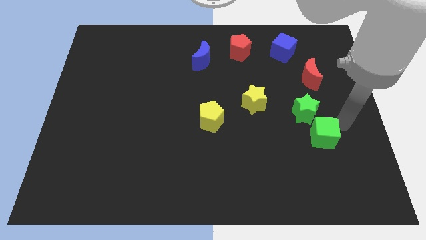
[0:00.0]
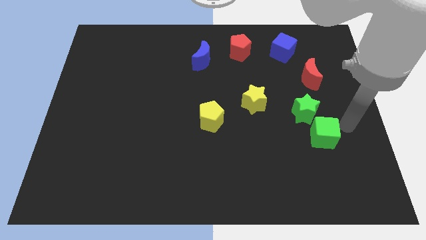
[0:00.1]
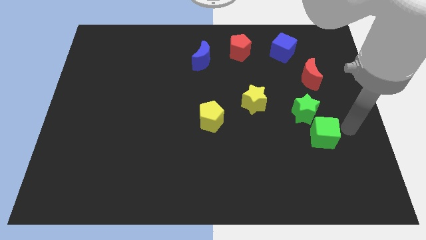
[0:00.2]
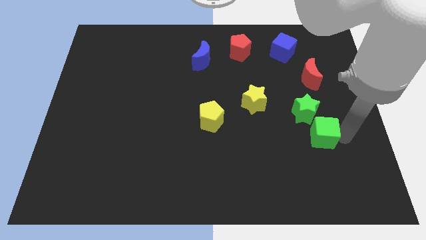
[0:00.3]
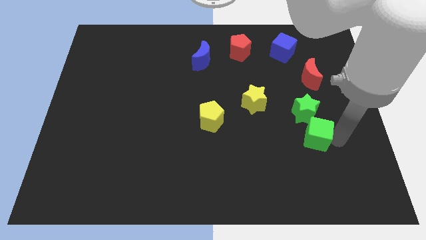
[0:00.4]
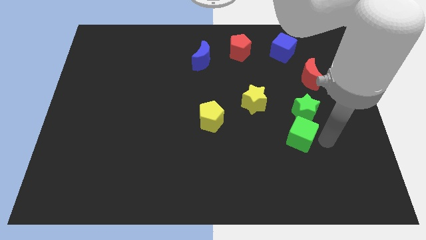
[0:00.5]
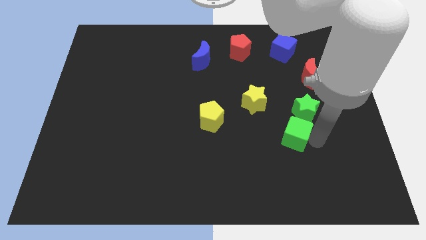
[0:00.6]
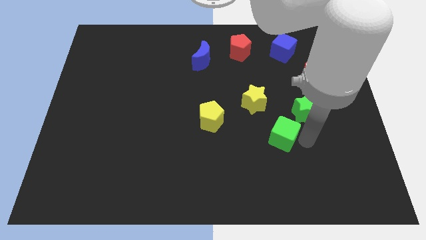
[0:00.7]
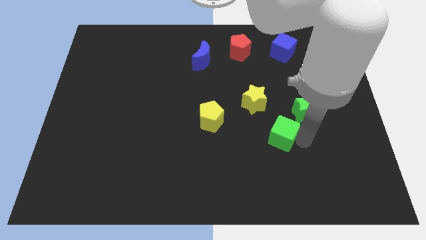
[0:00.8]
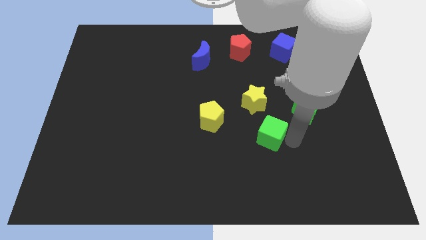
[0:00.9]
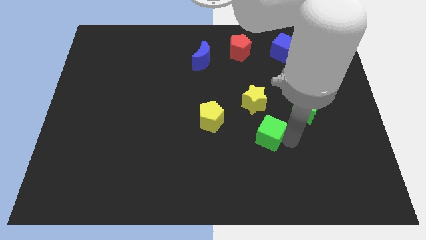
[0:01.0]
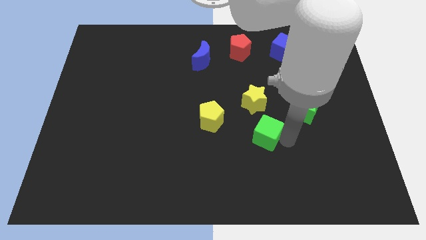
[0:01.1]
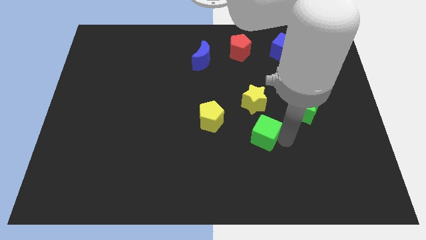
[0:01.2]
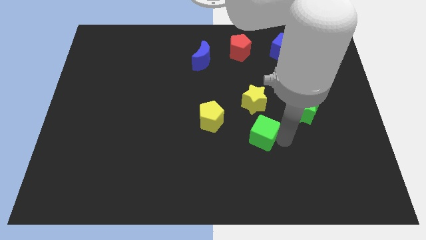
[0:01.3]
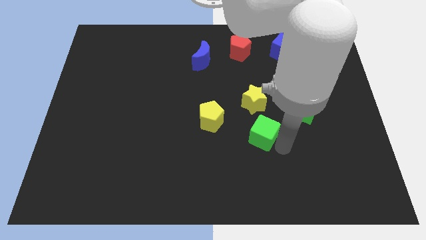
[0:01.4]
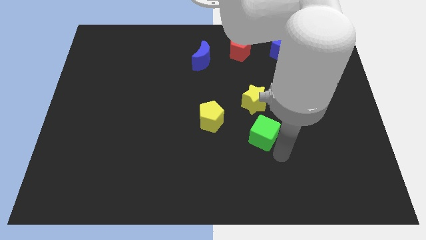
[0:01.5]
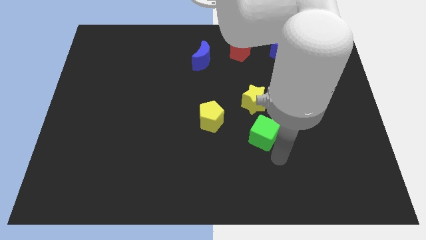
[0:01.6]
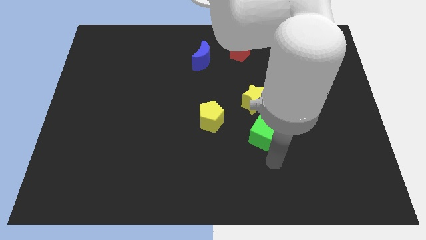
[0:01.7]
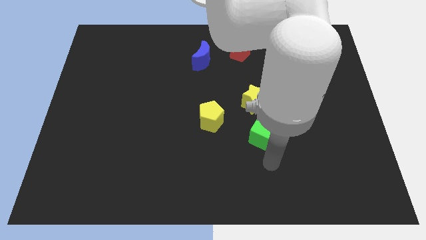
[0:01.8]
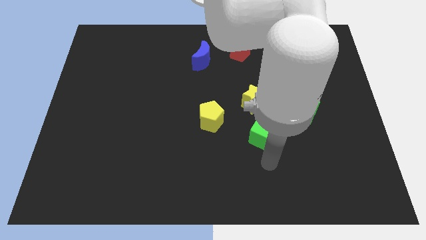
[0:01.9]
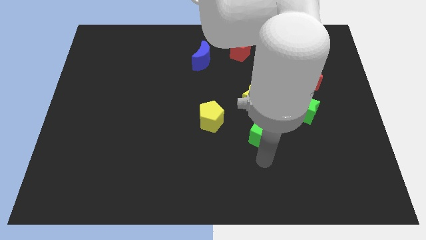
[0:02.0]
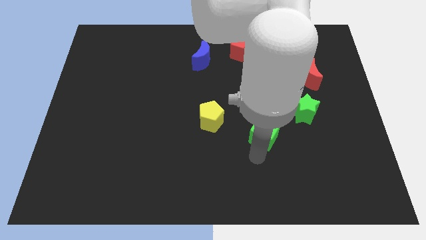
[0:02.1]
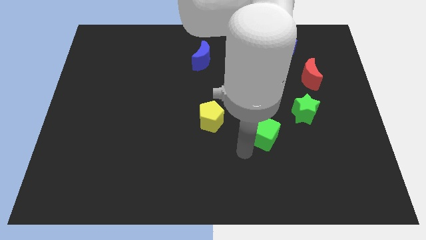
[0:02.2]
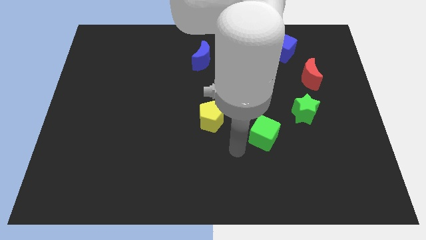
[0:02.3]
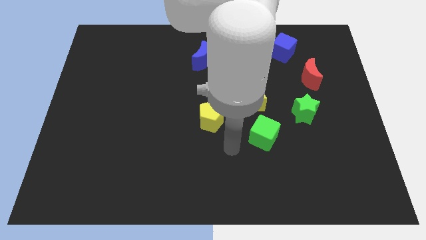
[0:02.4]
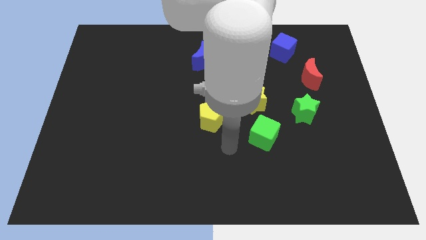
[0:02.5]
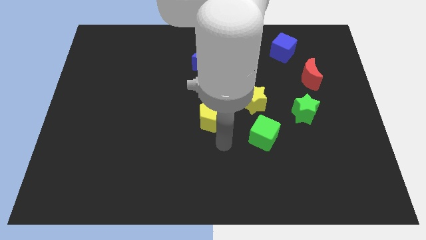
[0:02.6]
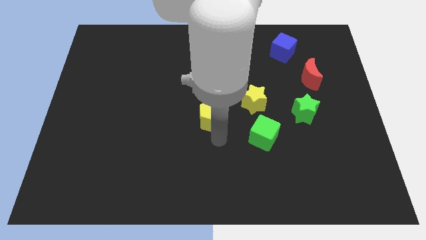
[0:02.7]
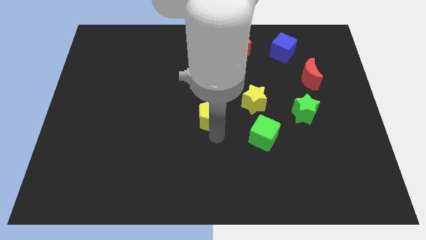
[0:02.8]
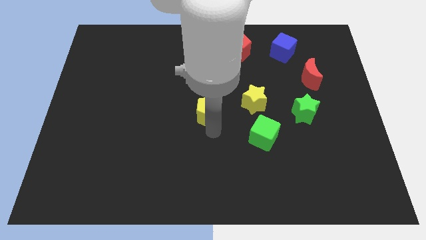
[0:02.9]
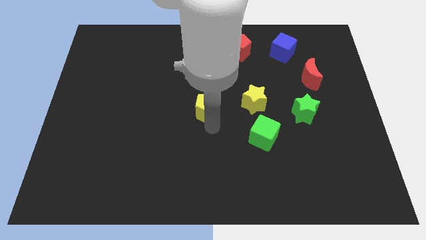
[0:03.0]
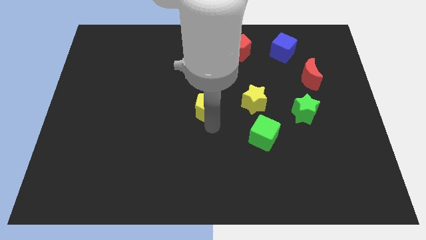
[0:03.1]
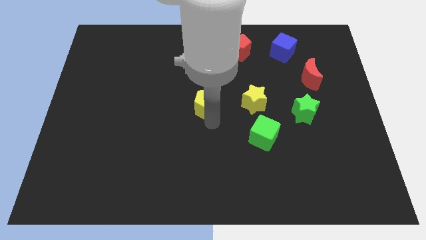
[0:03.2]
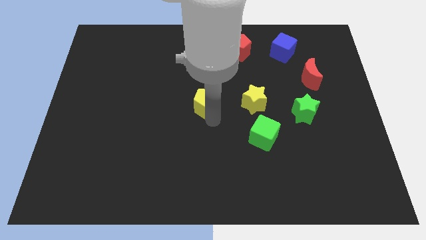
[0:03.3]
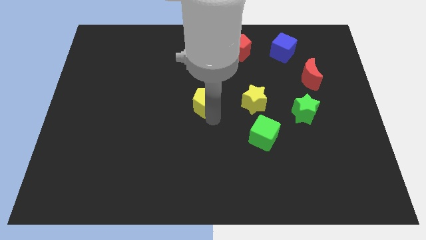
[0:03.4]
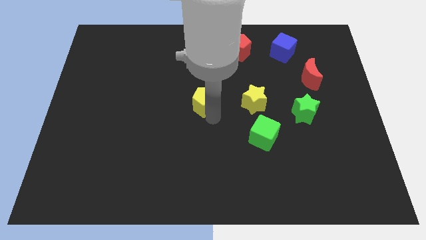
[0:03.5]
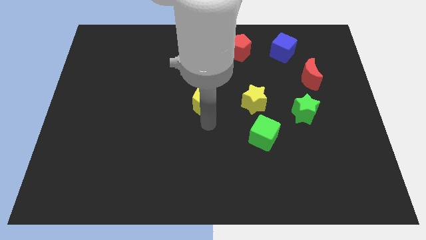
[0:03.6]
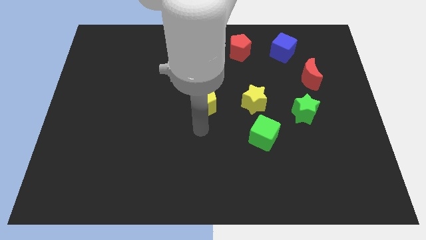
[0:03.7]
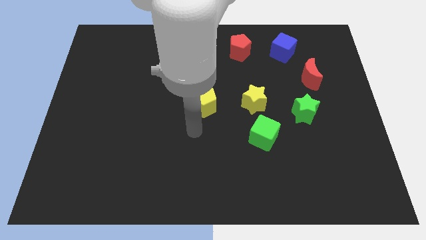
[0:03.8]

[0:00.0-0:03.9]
move green cube below yellow star

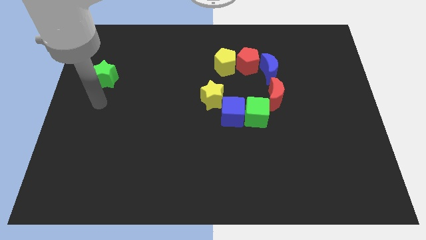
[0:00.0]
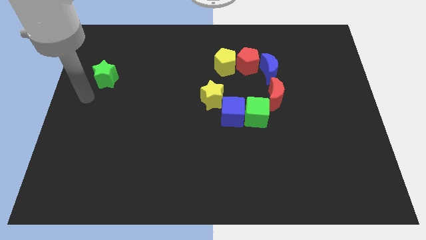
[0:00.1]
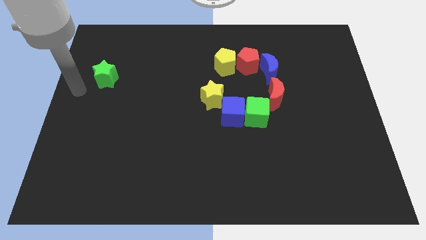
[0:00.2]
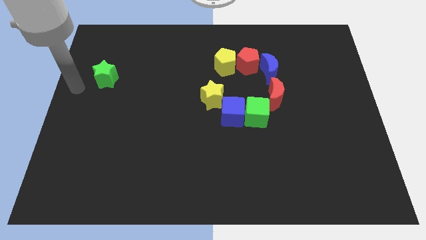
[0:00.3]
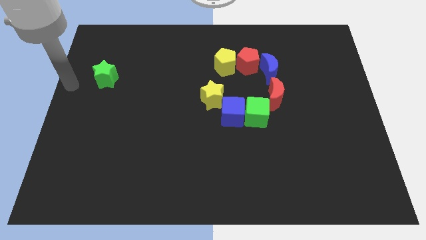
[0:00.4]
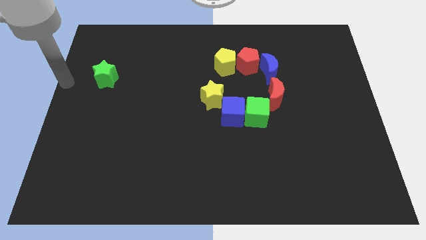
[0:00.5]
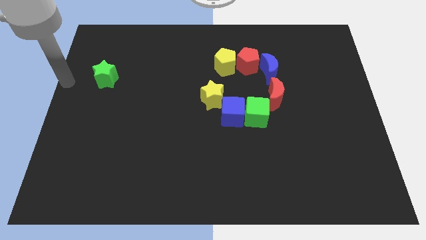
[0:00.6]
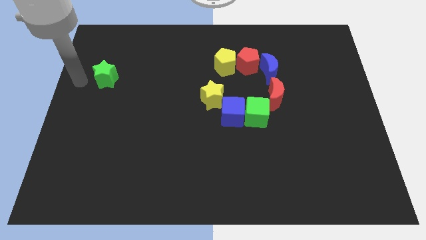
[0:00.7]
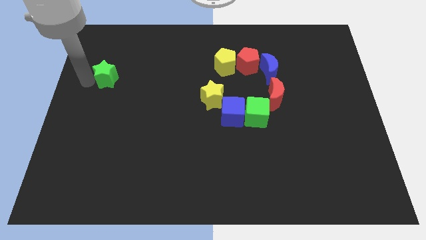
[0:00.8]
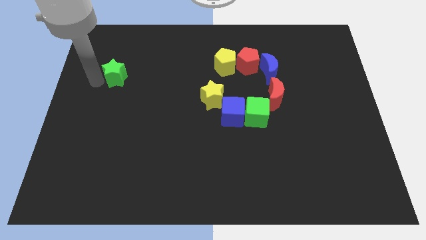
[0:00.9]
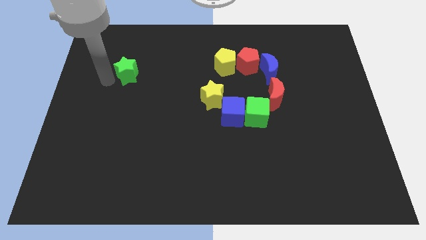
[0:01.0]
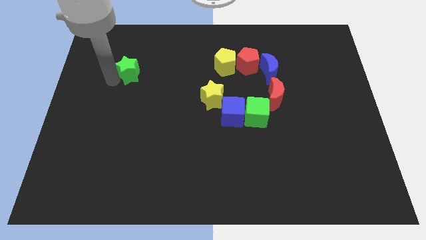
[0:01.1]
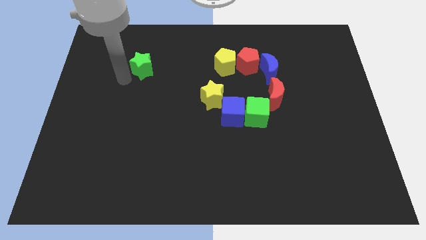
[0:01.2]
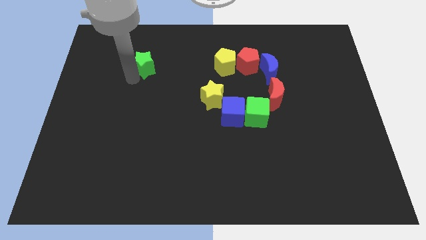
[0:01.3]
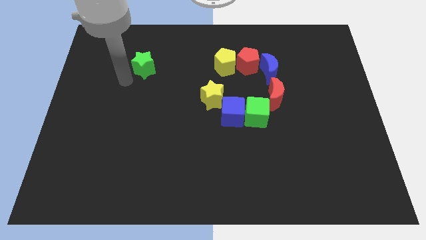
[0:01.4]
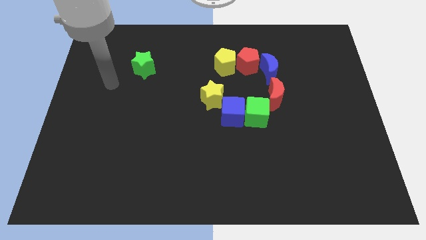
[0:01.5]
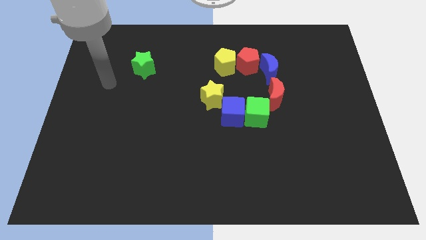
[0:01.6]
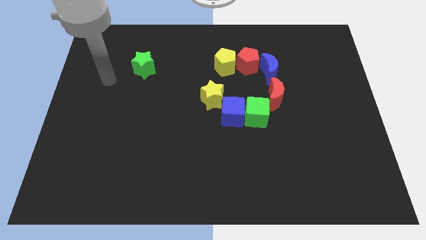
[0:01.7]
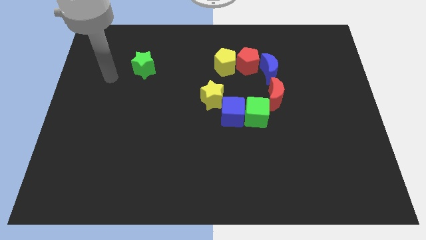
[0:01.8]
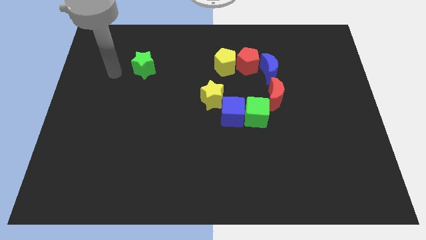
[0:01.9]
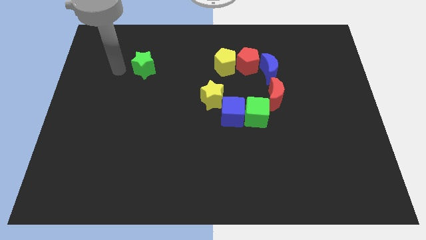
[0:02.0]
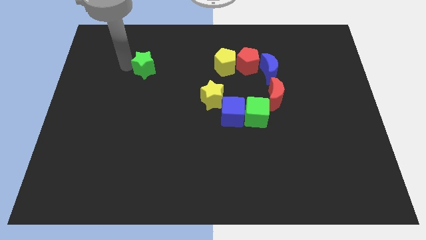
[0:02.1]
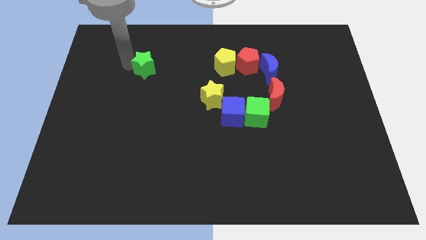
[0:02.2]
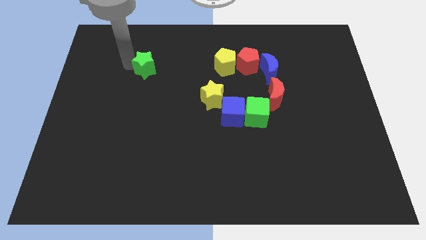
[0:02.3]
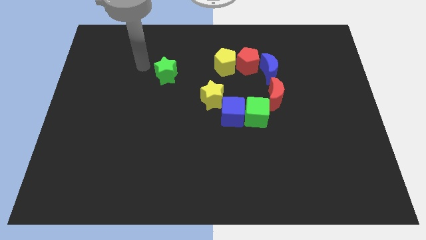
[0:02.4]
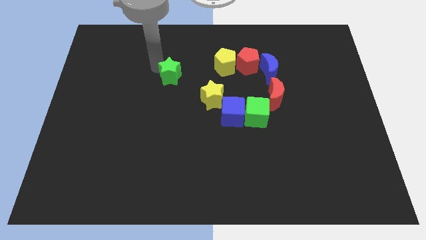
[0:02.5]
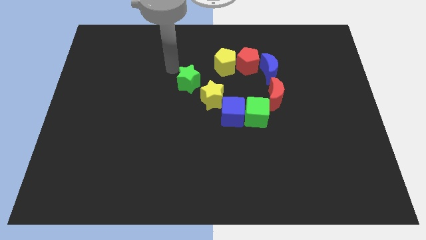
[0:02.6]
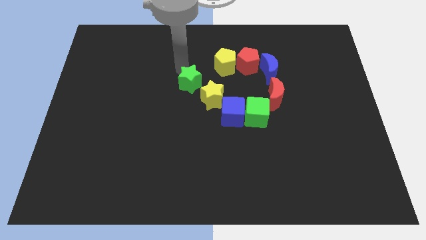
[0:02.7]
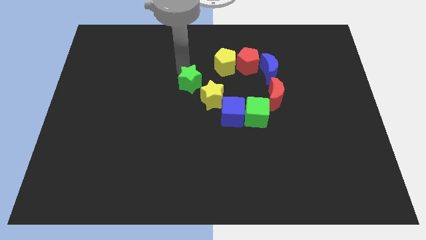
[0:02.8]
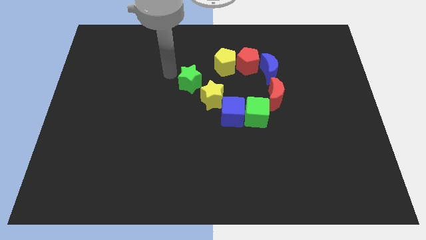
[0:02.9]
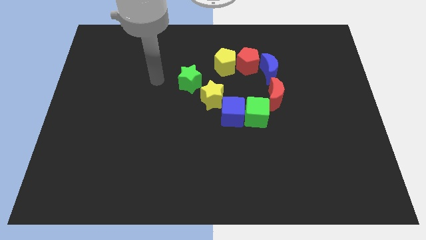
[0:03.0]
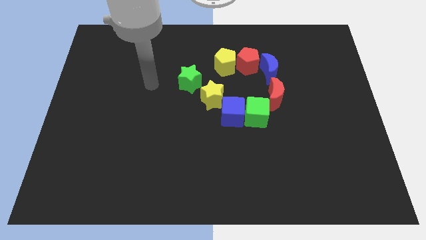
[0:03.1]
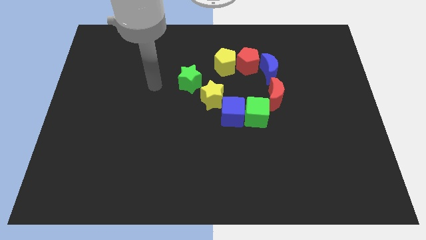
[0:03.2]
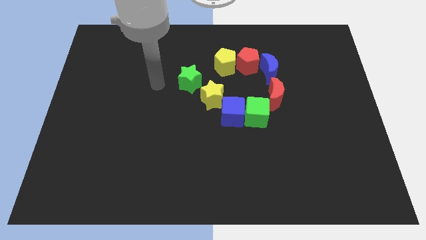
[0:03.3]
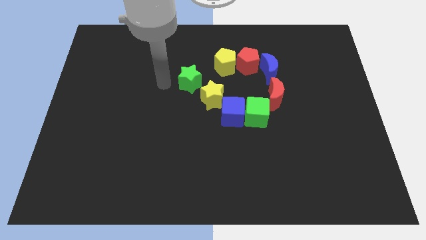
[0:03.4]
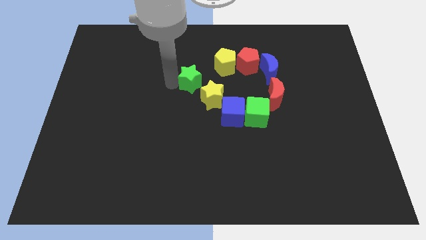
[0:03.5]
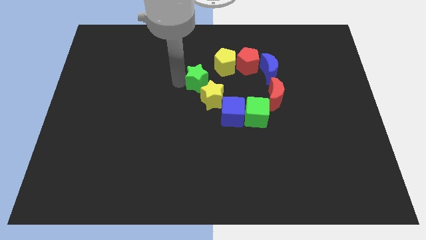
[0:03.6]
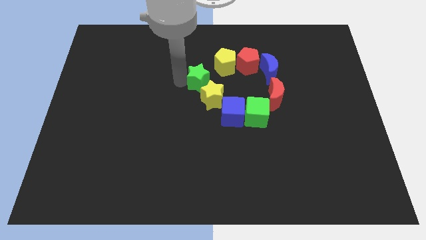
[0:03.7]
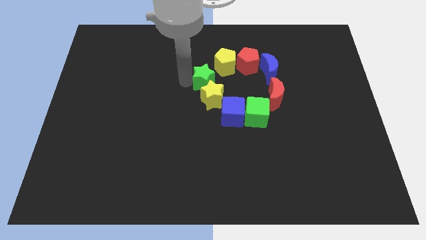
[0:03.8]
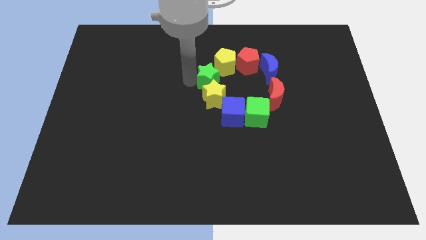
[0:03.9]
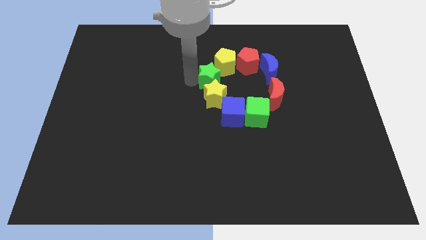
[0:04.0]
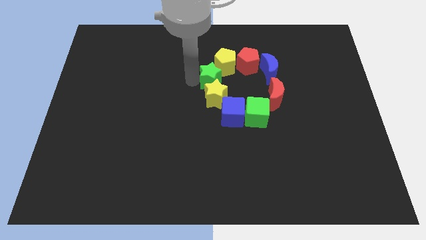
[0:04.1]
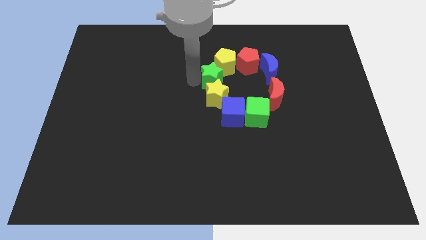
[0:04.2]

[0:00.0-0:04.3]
push the green star into the yellow star

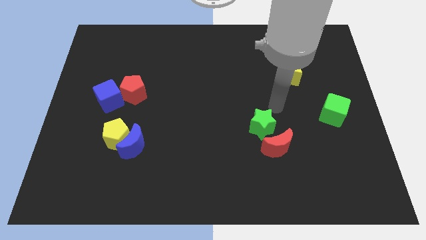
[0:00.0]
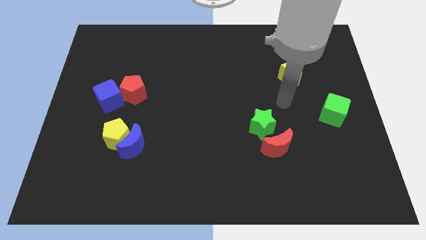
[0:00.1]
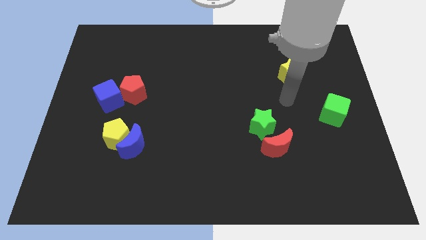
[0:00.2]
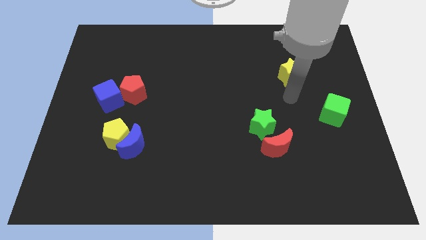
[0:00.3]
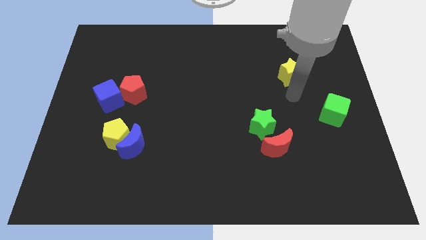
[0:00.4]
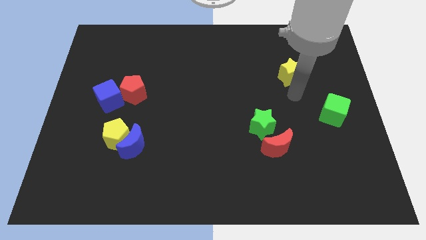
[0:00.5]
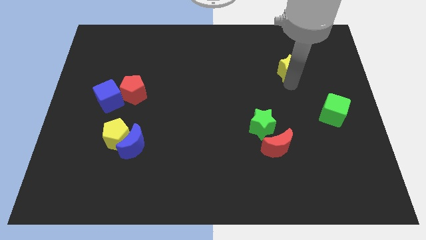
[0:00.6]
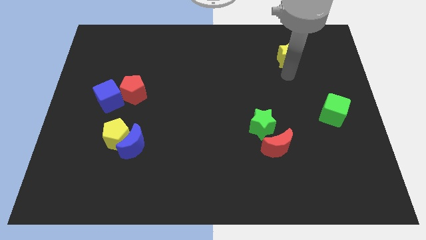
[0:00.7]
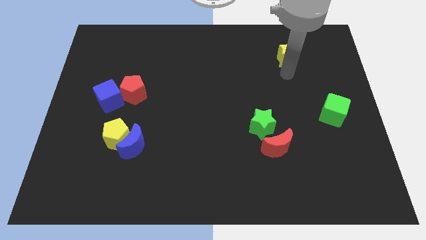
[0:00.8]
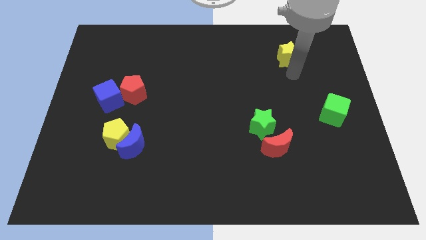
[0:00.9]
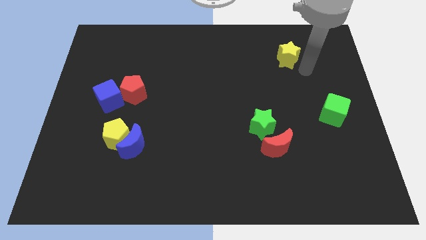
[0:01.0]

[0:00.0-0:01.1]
move the yellow star slightly to the top
